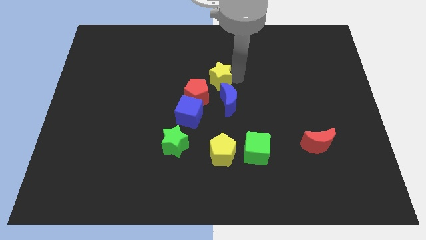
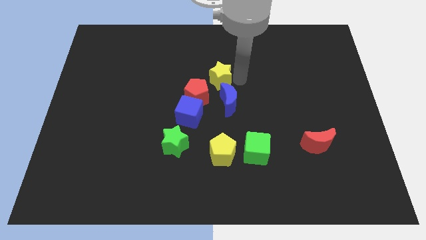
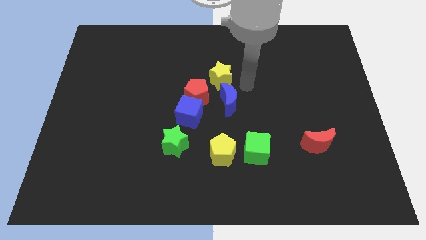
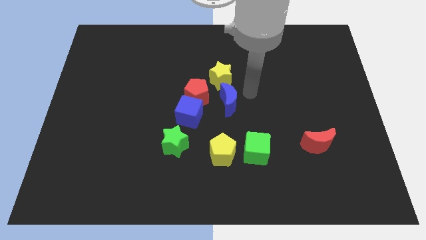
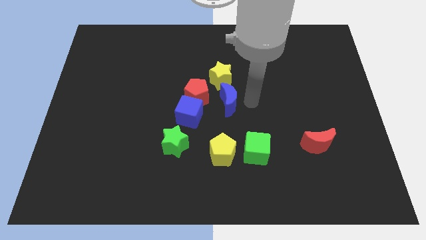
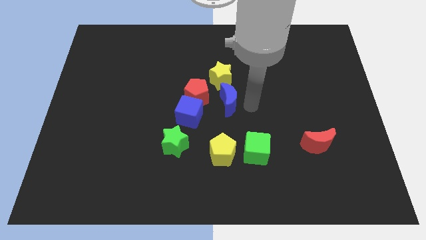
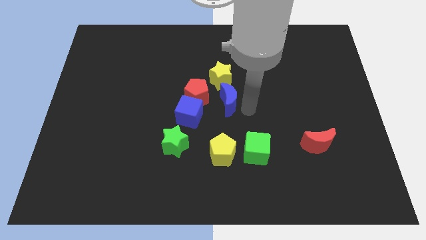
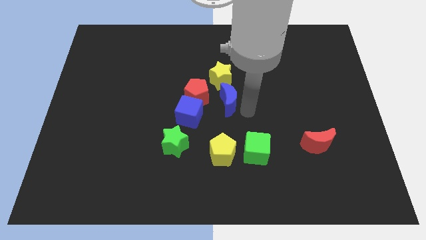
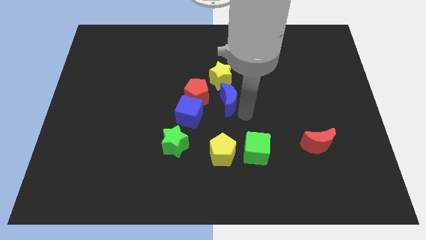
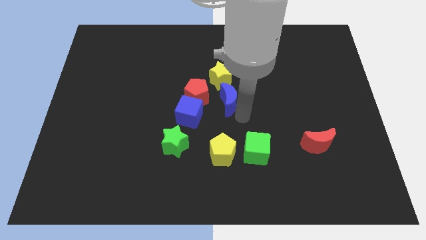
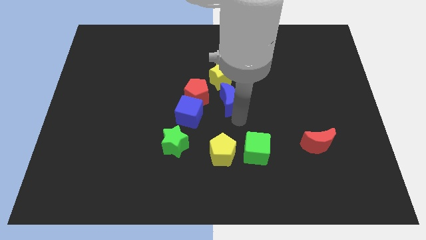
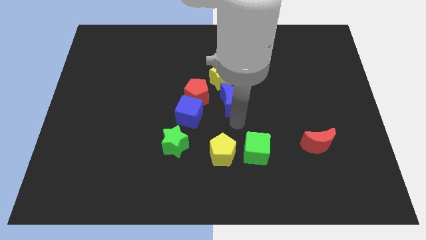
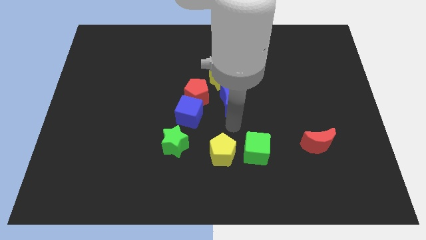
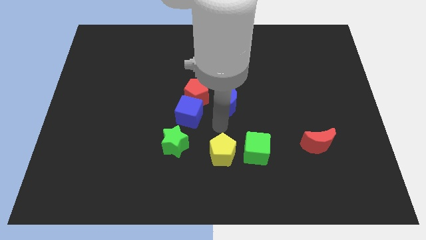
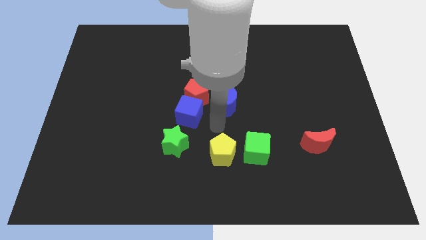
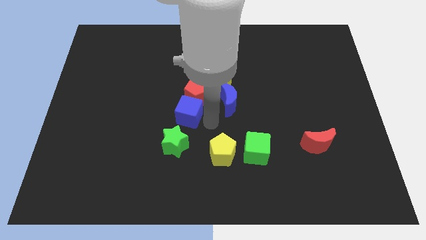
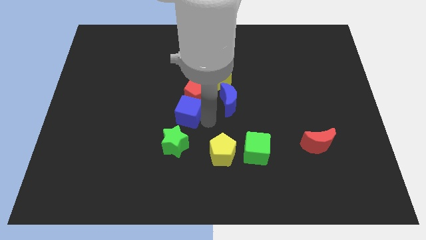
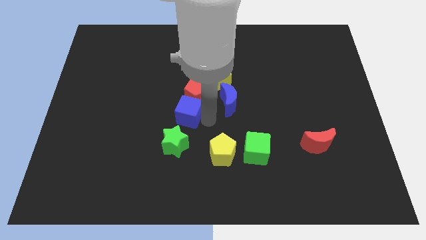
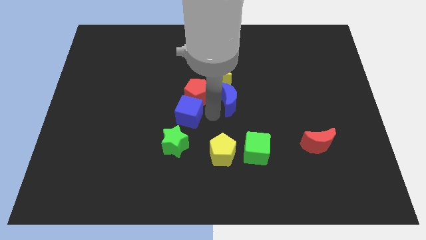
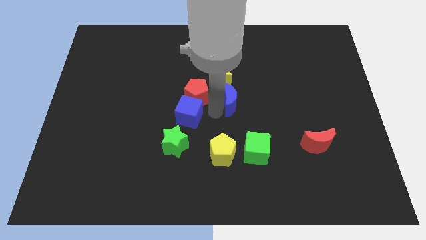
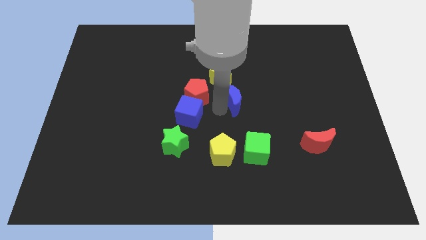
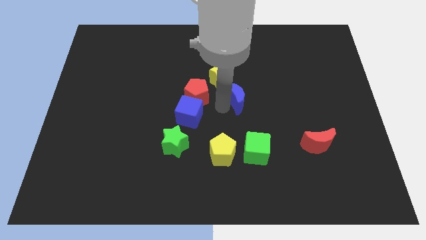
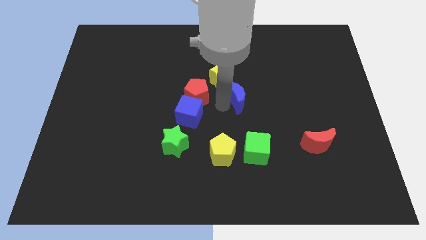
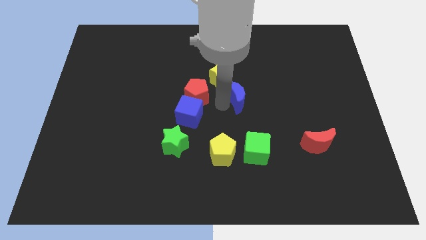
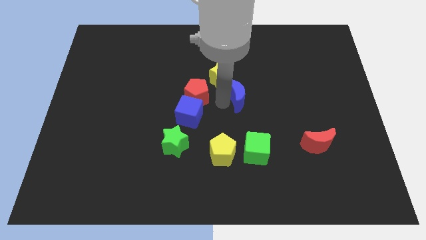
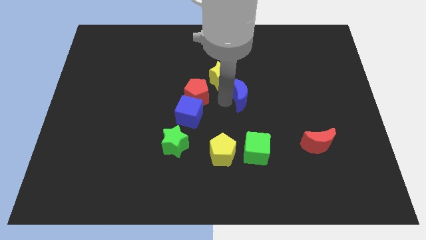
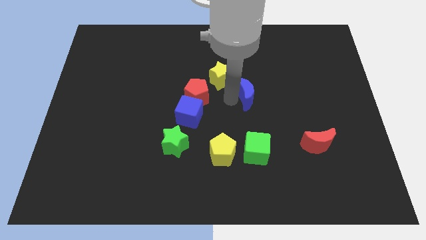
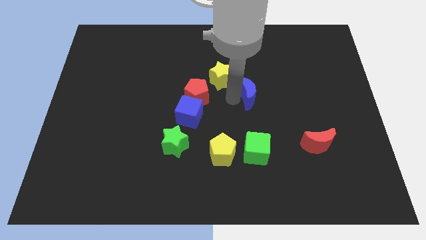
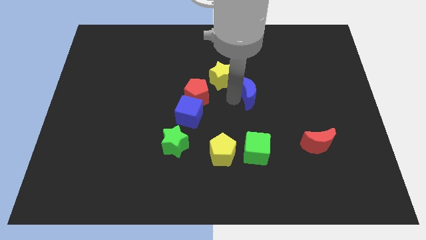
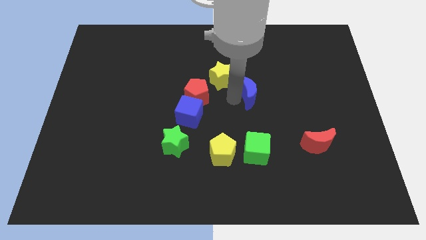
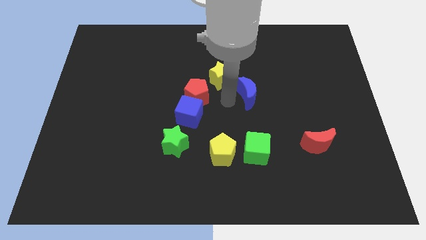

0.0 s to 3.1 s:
place the blue moon at the bottom right of the yellow star

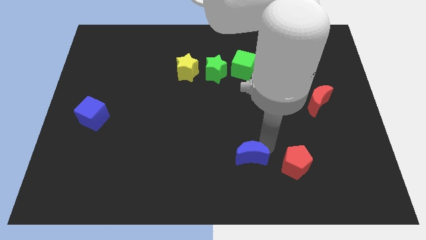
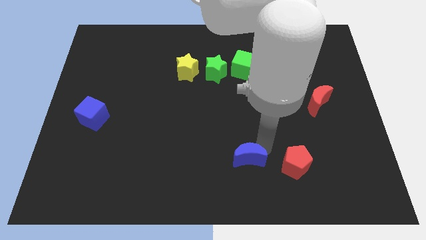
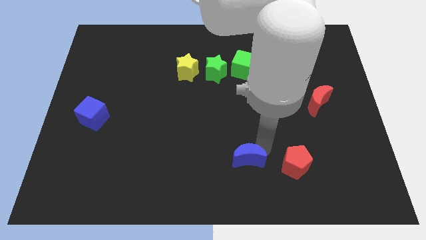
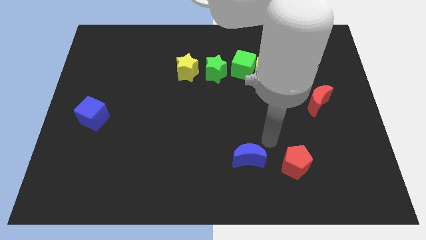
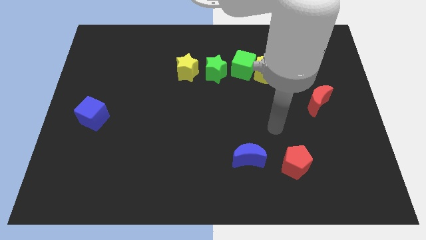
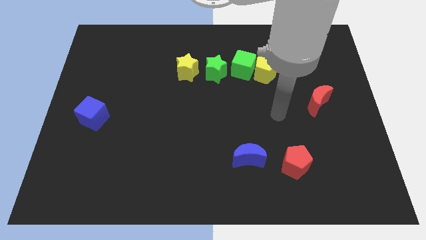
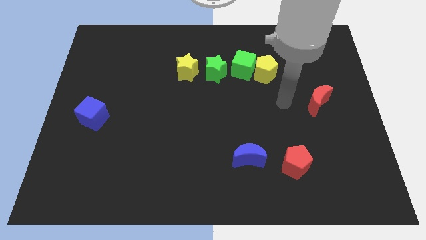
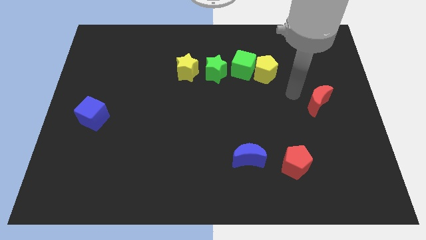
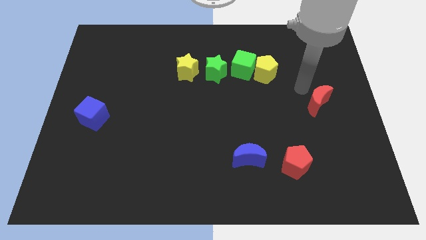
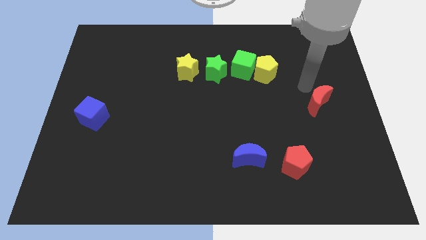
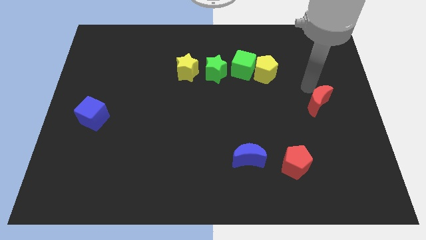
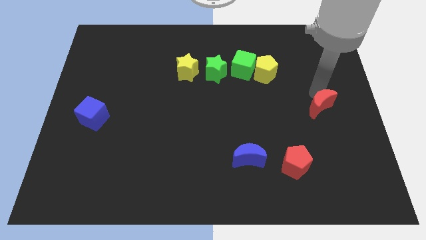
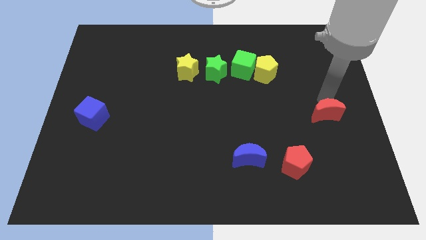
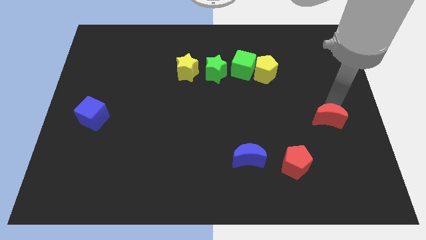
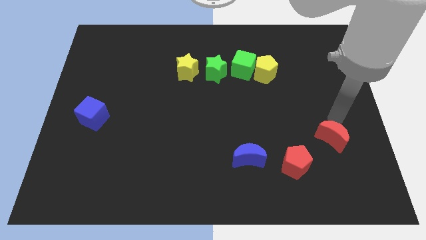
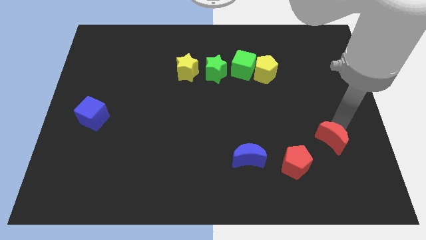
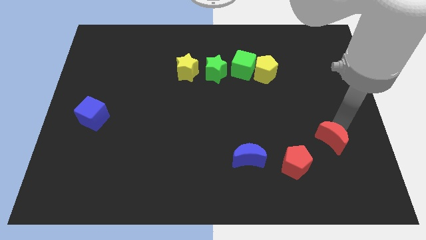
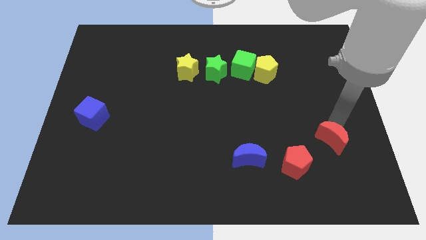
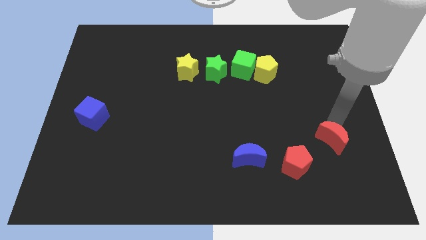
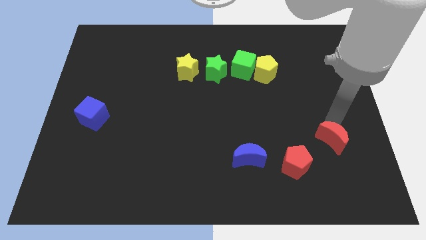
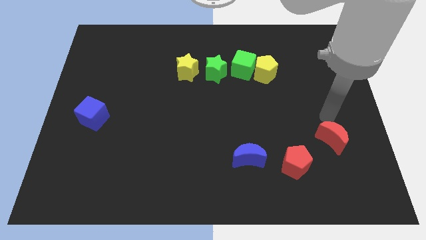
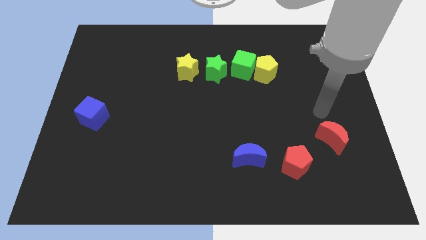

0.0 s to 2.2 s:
place the red crescent diagonal to the yellow pentagon

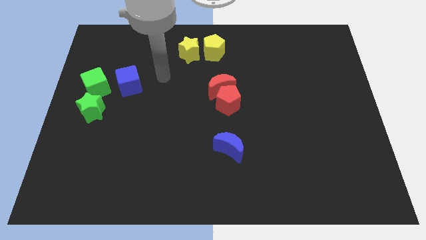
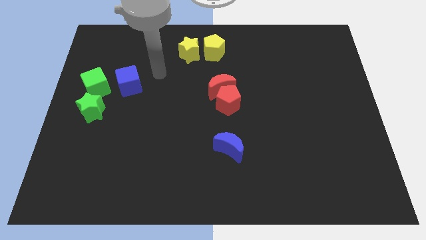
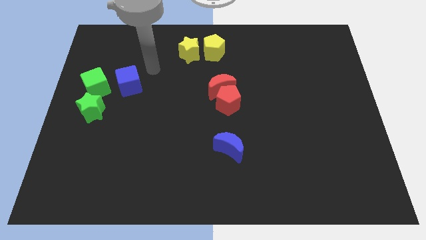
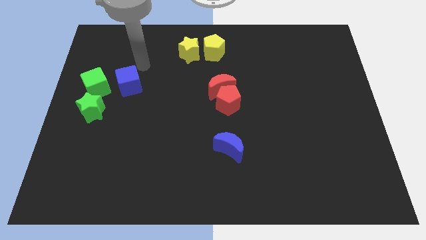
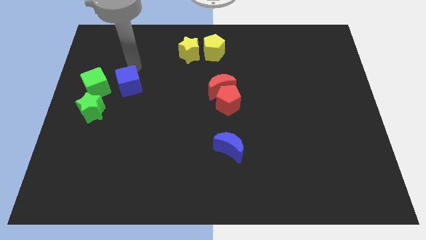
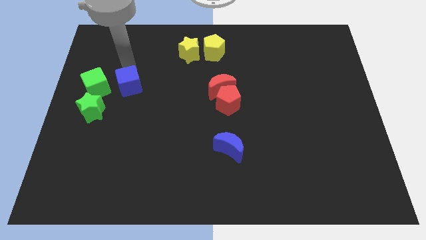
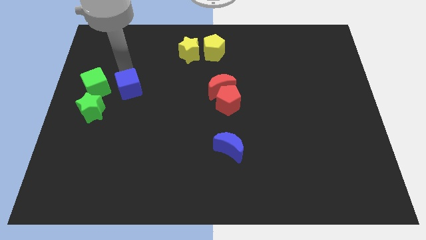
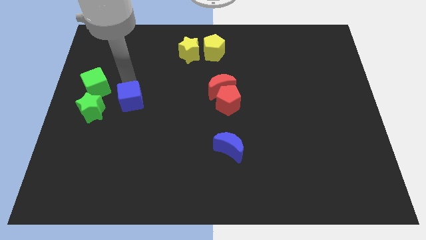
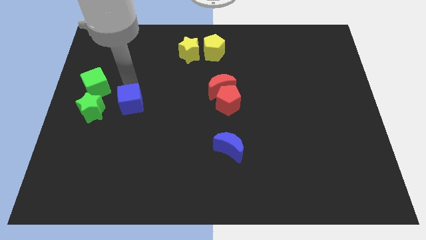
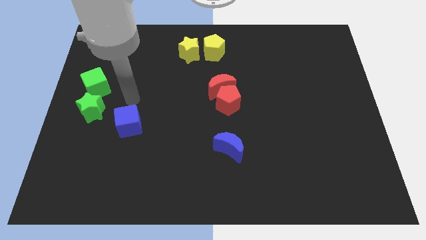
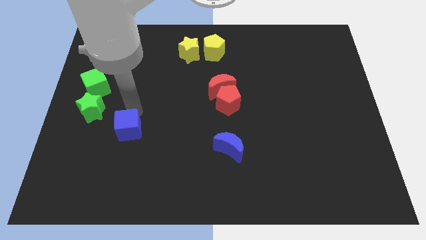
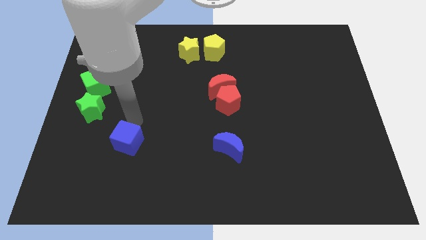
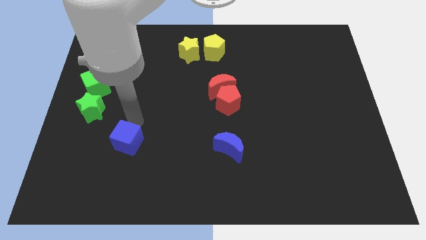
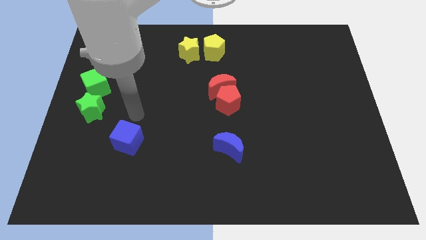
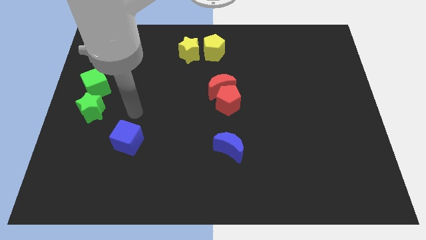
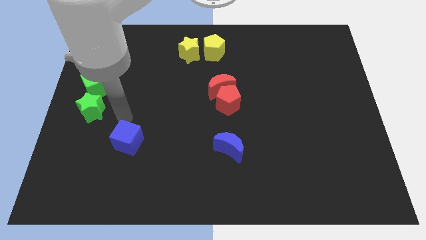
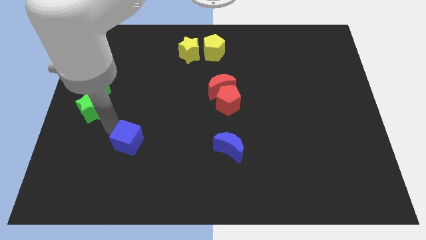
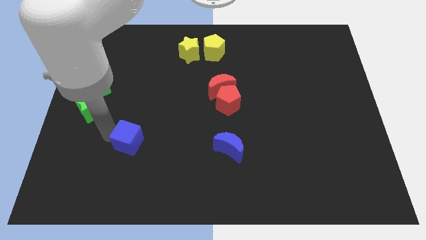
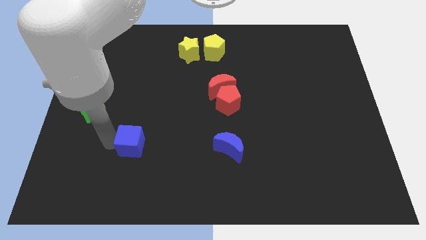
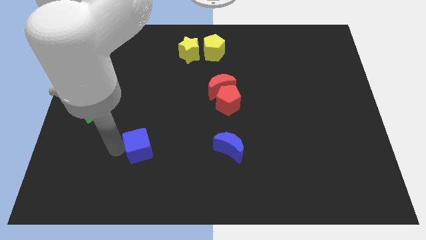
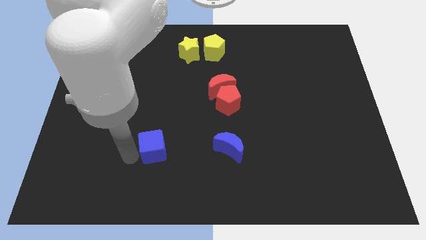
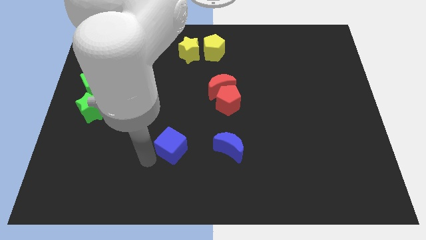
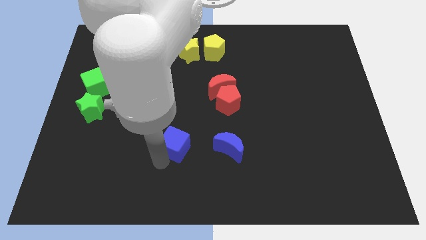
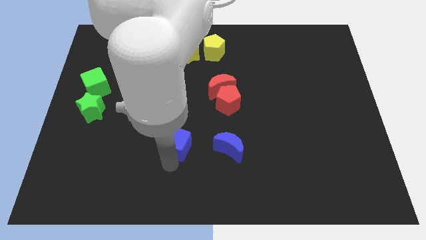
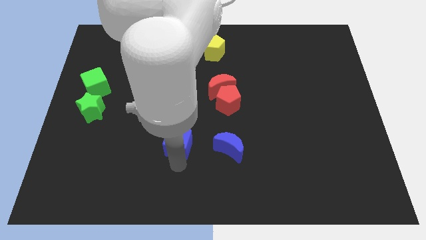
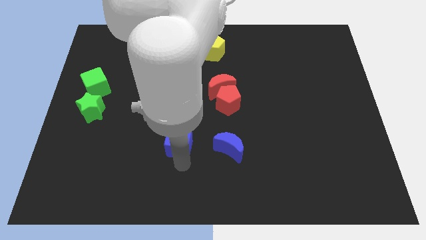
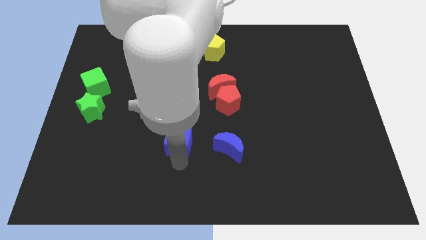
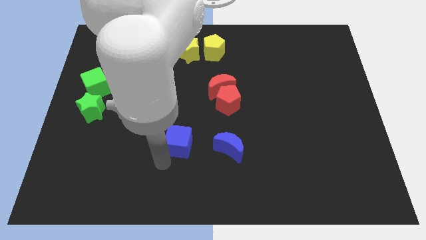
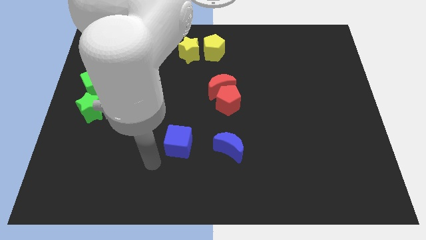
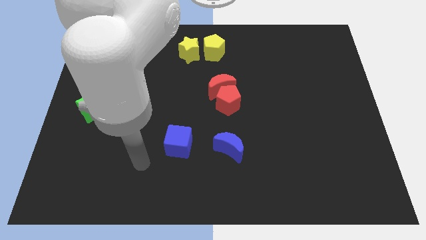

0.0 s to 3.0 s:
push blue cube to the bottom left of the red pentagon

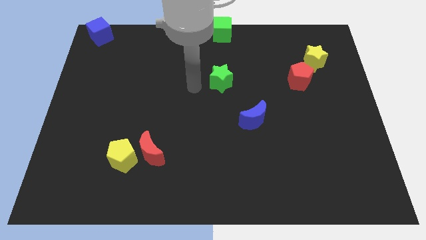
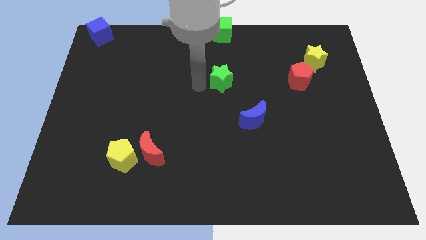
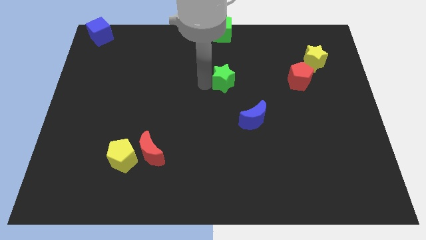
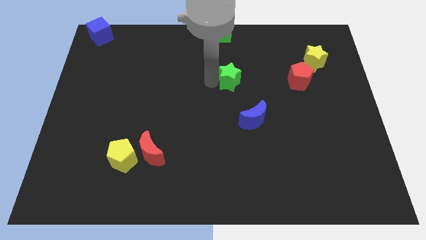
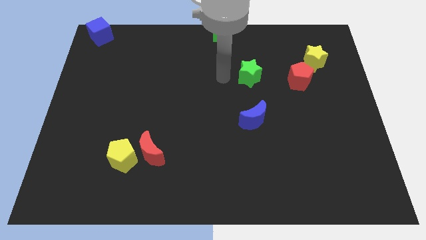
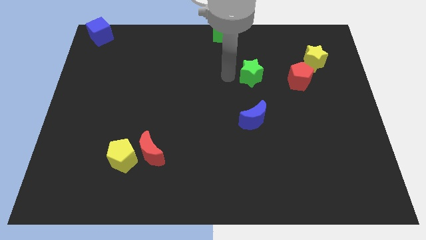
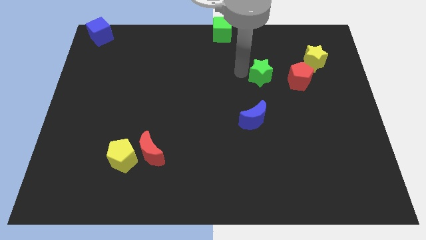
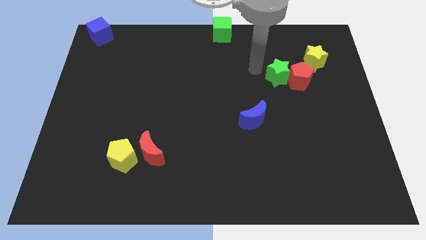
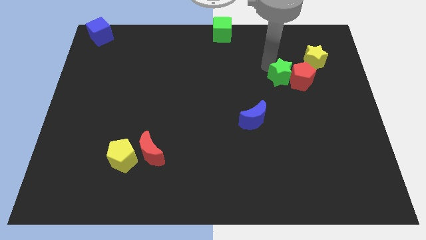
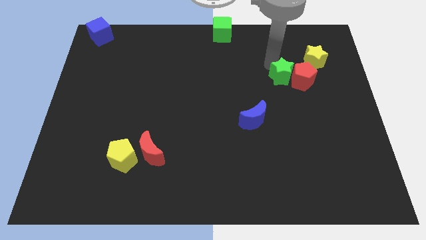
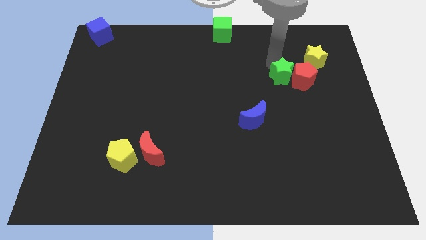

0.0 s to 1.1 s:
slide green star into red pentagon
